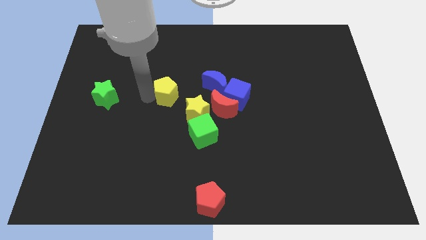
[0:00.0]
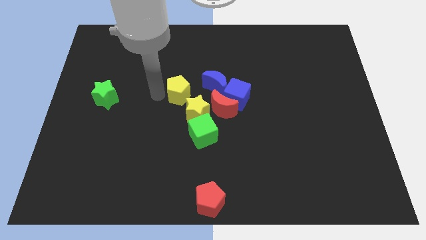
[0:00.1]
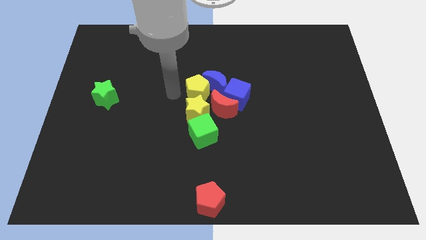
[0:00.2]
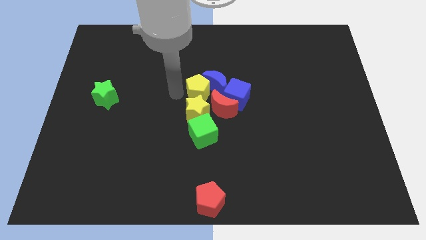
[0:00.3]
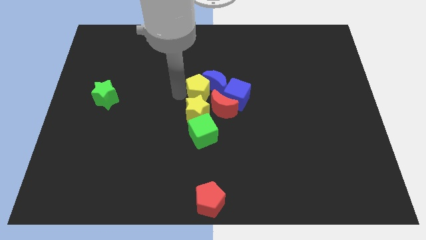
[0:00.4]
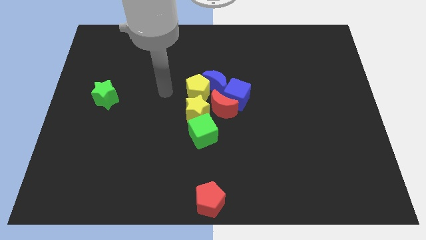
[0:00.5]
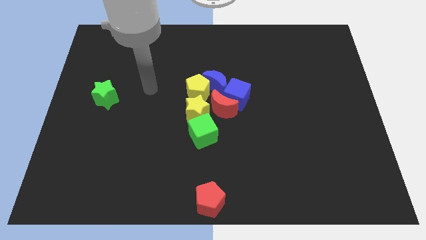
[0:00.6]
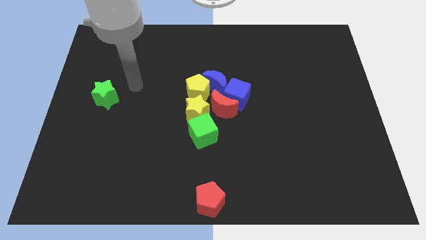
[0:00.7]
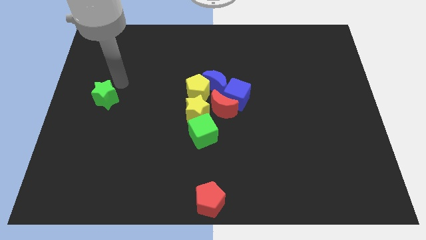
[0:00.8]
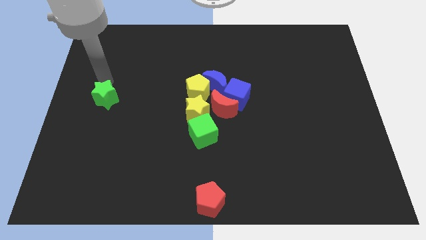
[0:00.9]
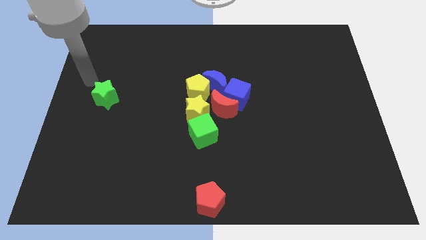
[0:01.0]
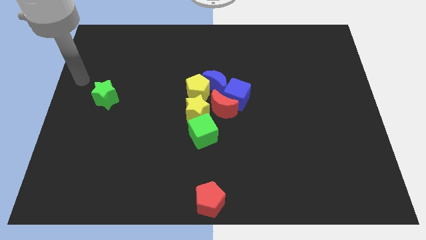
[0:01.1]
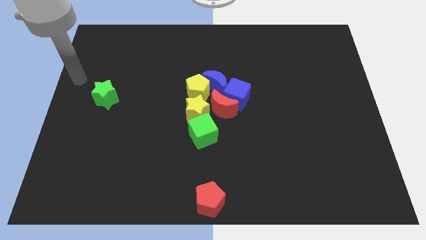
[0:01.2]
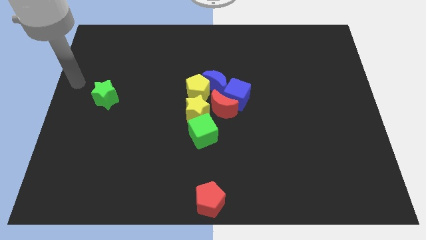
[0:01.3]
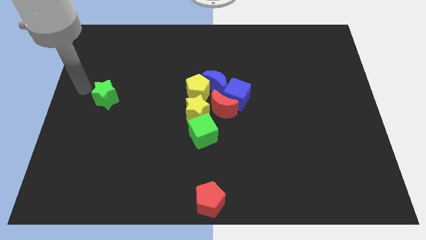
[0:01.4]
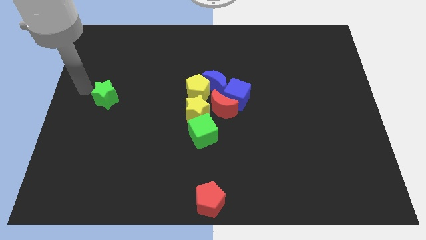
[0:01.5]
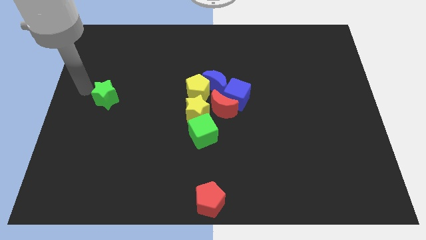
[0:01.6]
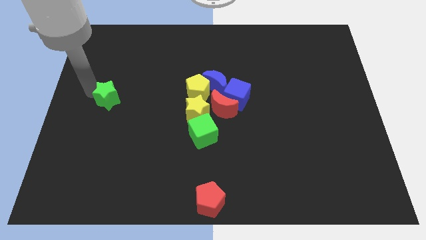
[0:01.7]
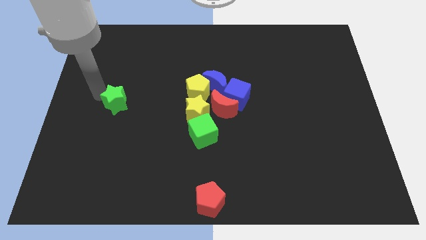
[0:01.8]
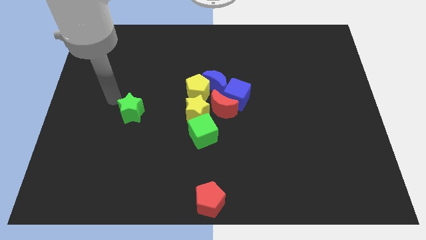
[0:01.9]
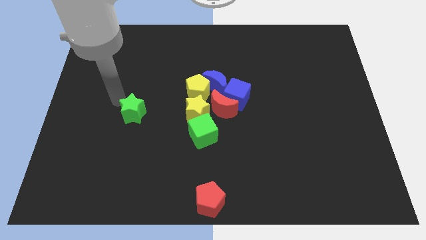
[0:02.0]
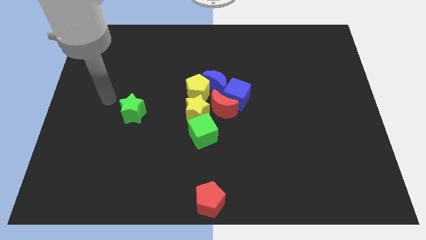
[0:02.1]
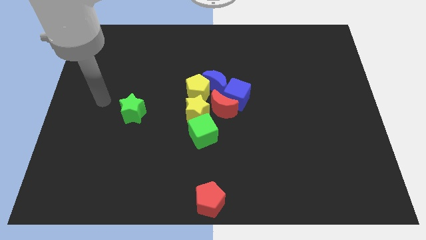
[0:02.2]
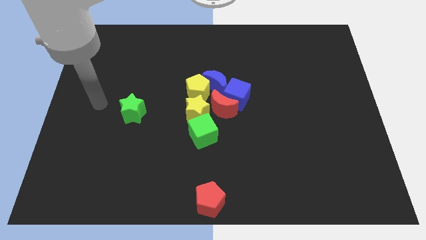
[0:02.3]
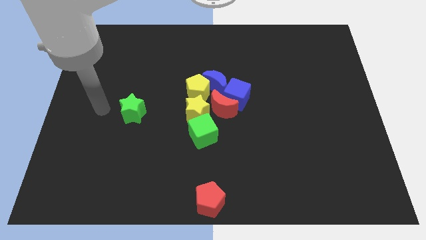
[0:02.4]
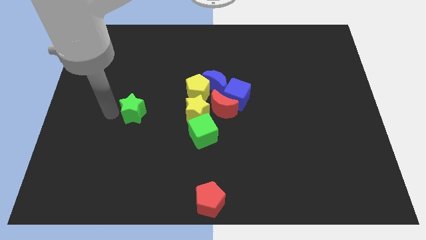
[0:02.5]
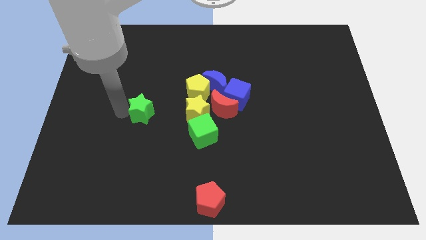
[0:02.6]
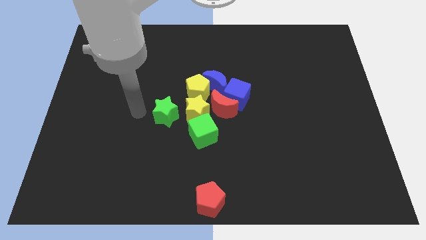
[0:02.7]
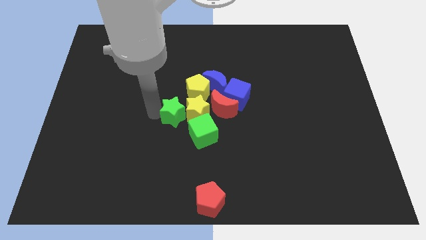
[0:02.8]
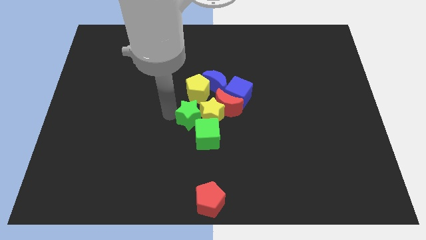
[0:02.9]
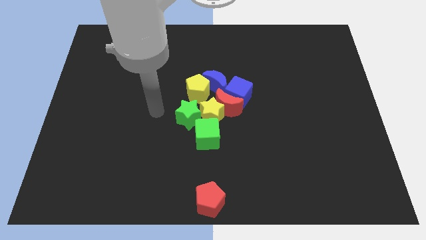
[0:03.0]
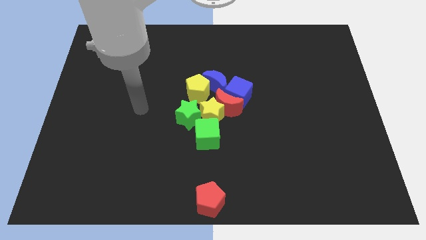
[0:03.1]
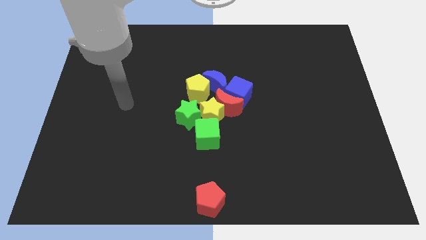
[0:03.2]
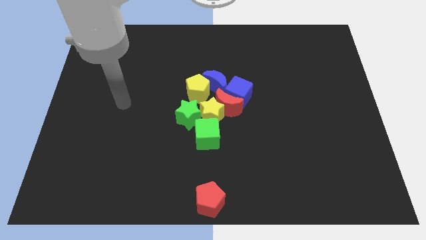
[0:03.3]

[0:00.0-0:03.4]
move the green star into the yellow star

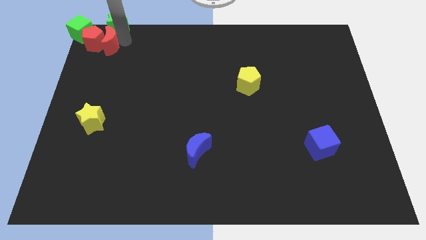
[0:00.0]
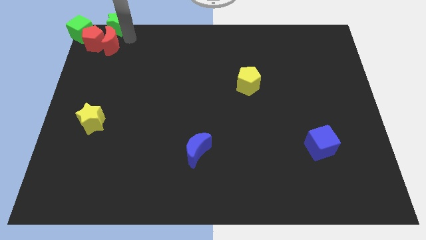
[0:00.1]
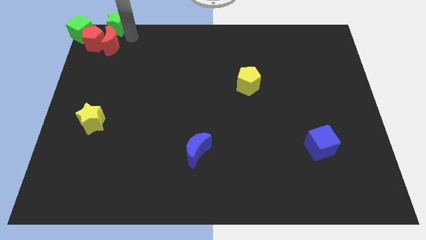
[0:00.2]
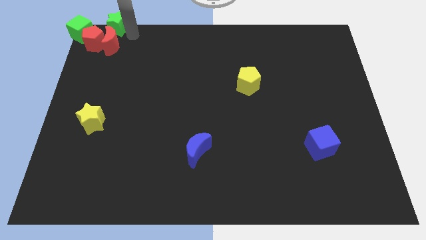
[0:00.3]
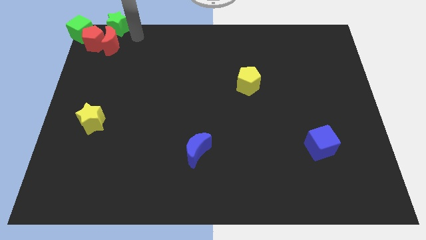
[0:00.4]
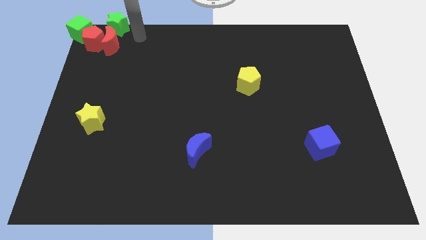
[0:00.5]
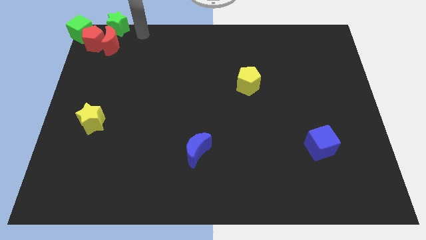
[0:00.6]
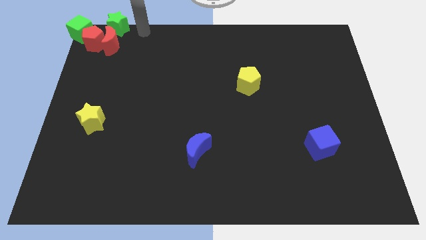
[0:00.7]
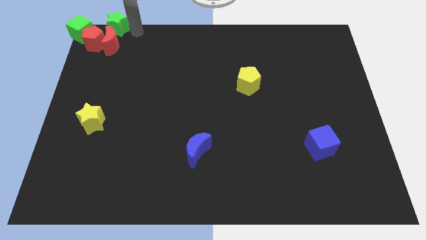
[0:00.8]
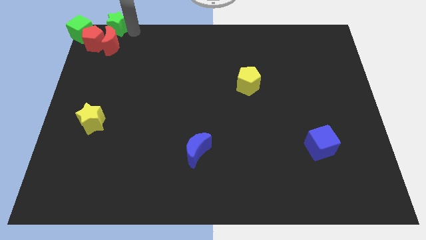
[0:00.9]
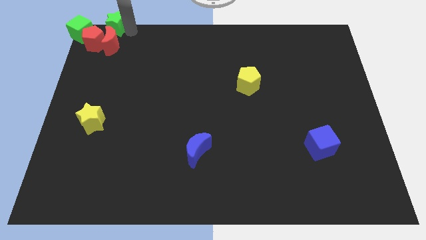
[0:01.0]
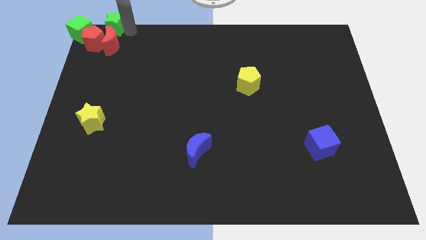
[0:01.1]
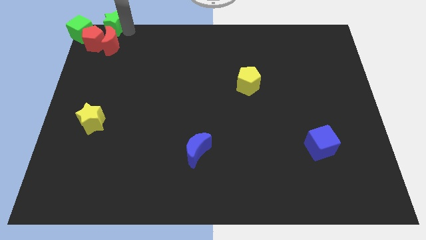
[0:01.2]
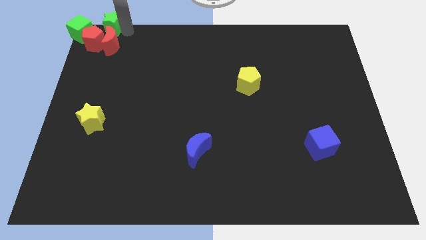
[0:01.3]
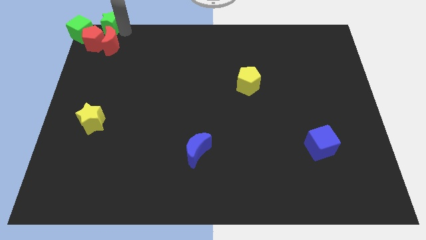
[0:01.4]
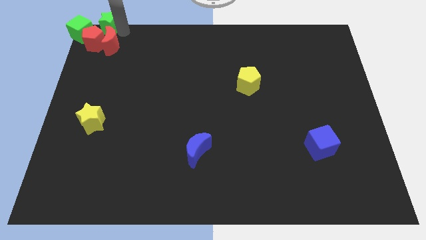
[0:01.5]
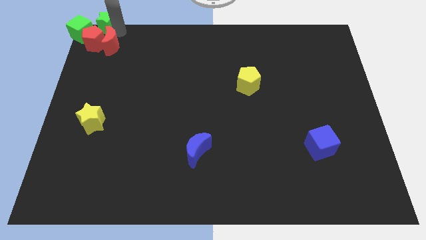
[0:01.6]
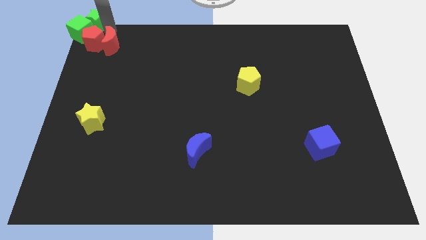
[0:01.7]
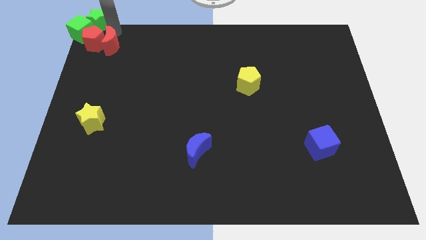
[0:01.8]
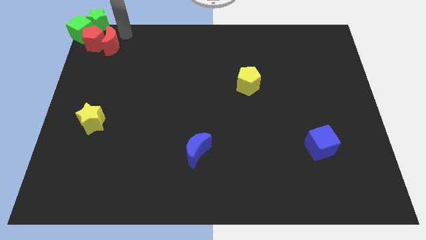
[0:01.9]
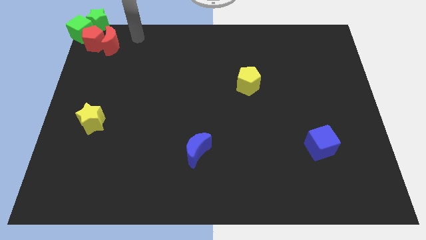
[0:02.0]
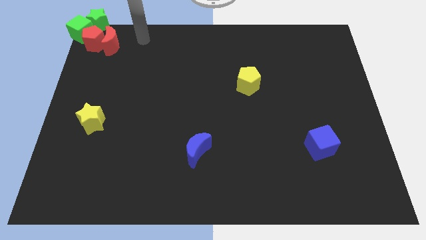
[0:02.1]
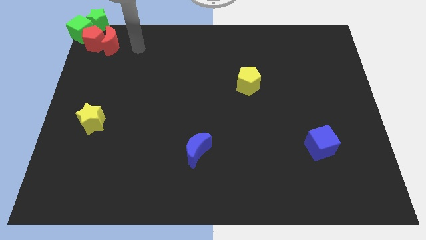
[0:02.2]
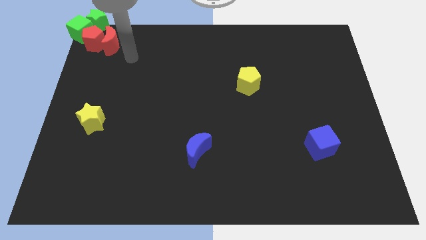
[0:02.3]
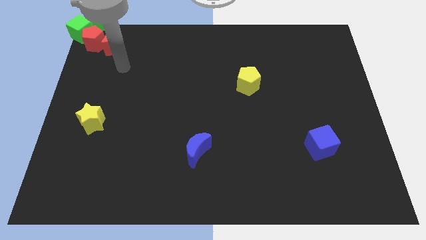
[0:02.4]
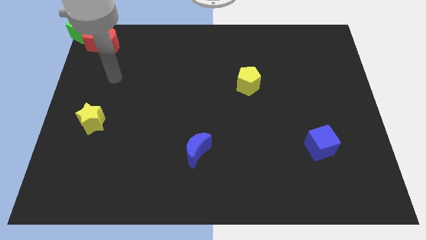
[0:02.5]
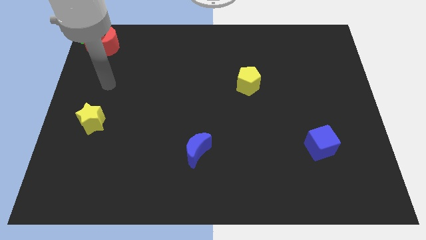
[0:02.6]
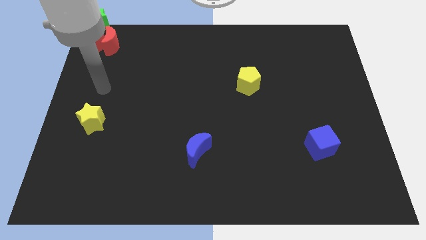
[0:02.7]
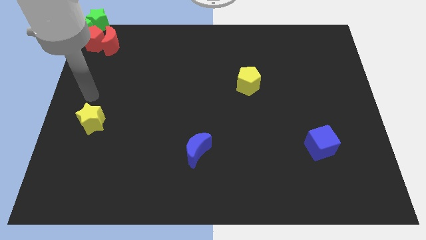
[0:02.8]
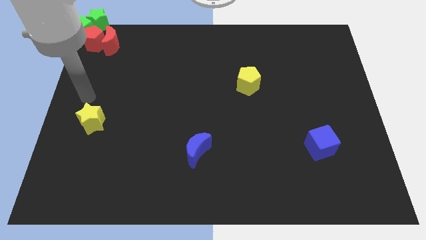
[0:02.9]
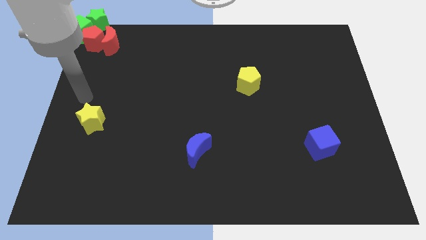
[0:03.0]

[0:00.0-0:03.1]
push the green star into the green cube

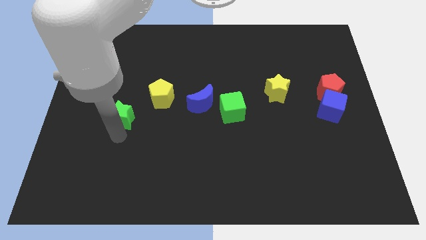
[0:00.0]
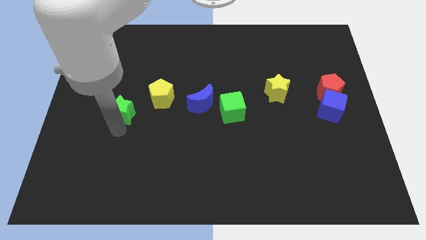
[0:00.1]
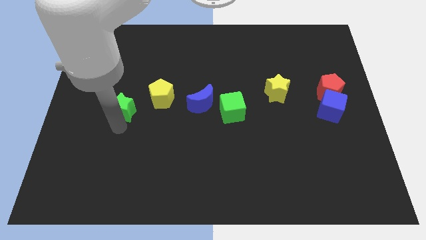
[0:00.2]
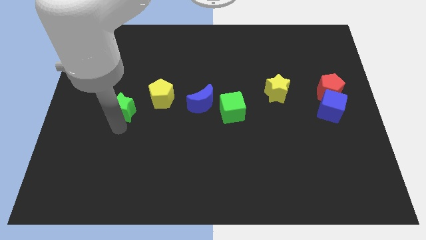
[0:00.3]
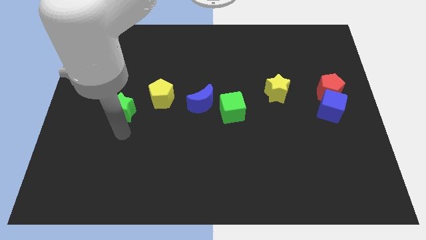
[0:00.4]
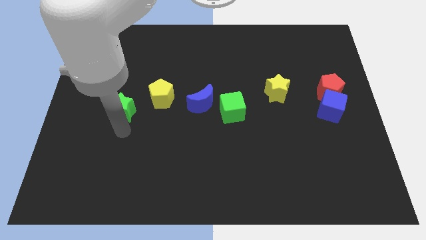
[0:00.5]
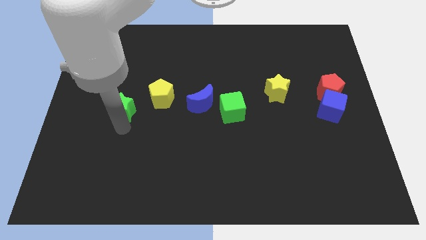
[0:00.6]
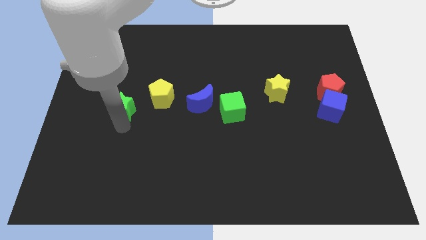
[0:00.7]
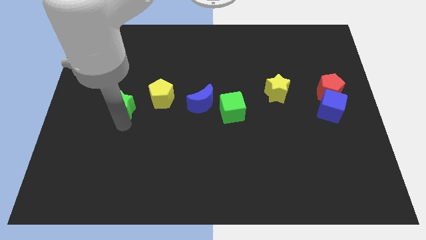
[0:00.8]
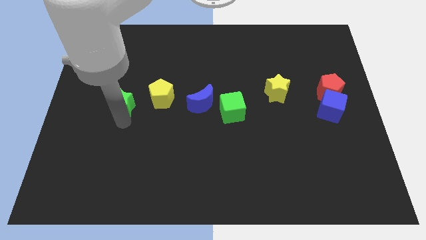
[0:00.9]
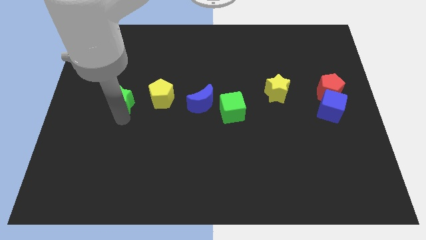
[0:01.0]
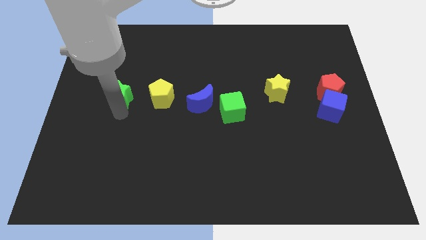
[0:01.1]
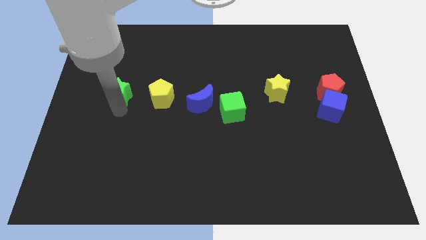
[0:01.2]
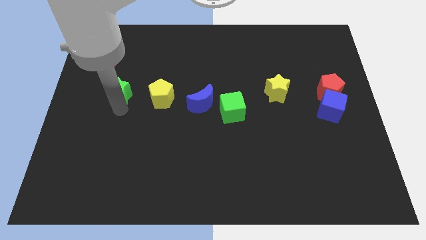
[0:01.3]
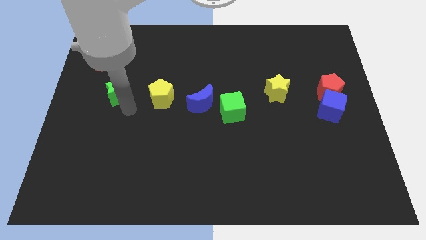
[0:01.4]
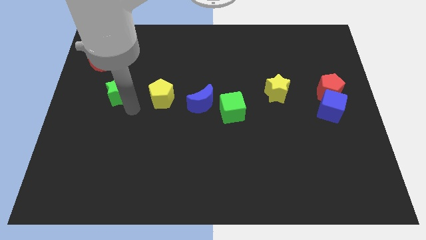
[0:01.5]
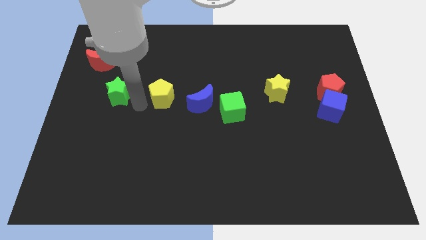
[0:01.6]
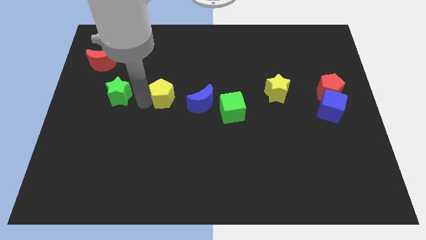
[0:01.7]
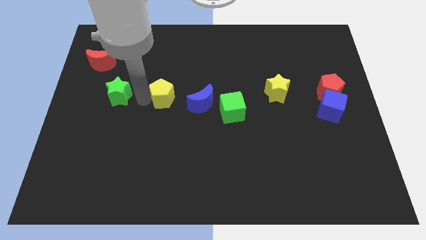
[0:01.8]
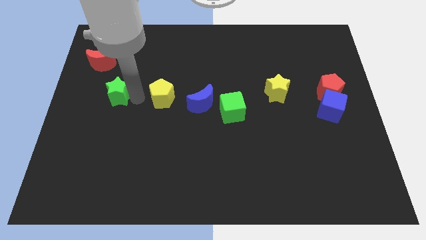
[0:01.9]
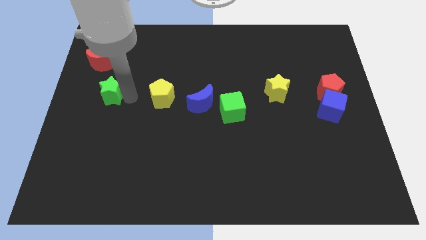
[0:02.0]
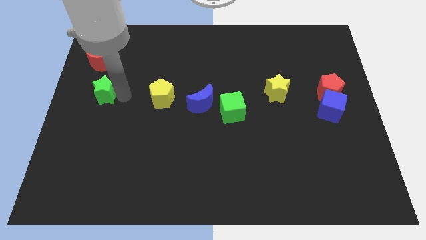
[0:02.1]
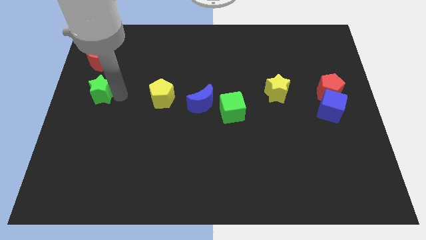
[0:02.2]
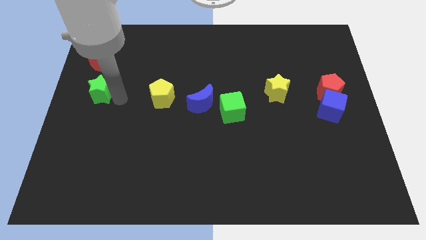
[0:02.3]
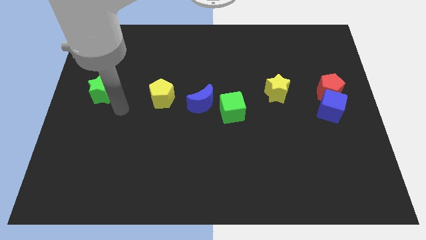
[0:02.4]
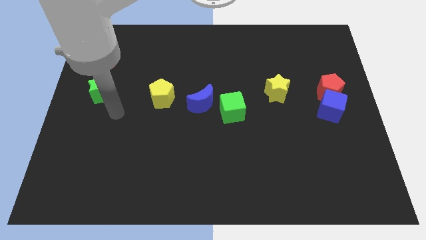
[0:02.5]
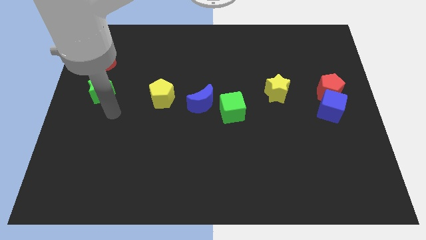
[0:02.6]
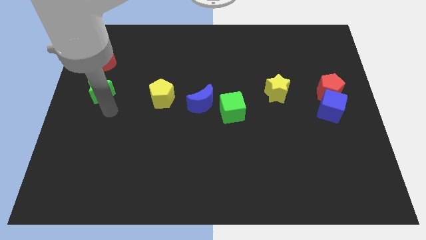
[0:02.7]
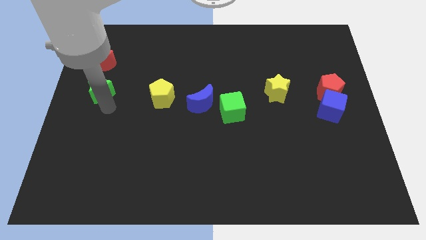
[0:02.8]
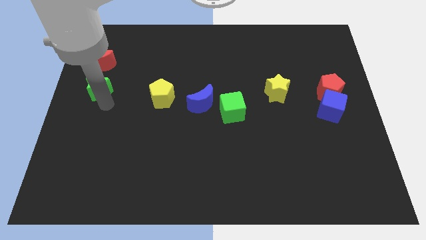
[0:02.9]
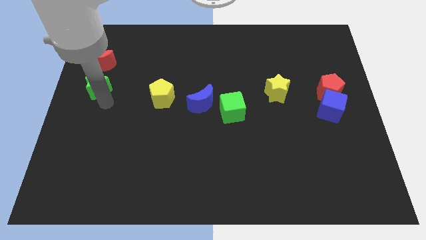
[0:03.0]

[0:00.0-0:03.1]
place green star below red crescent
